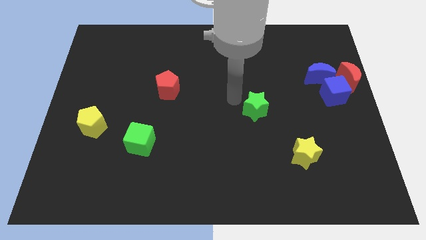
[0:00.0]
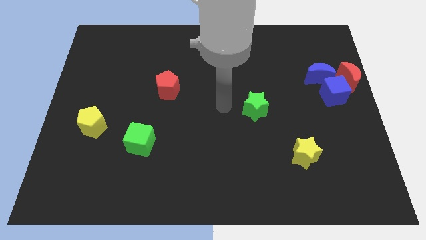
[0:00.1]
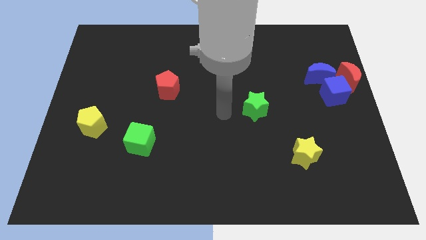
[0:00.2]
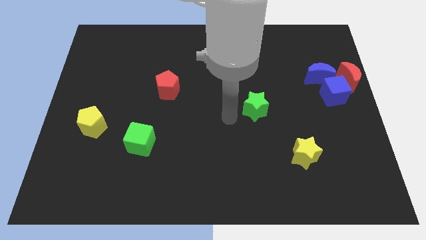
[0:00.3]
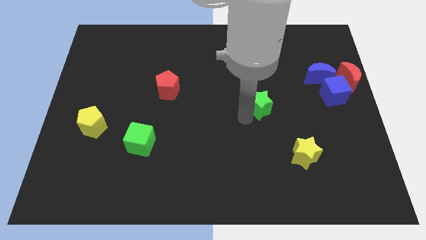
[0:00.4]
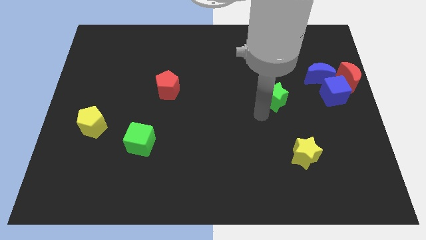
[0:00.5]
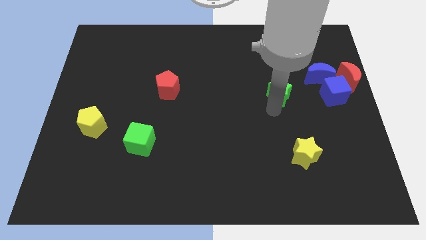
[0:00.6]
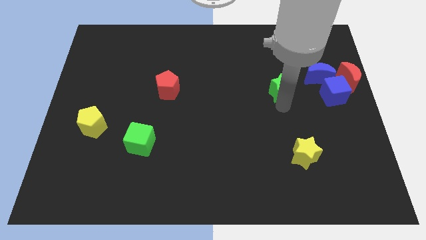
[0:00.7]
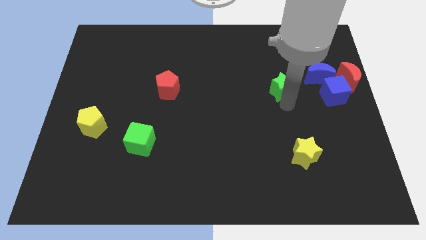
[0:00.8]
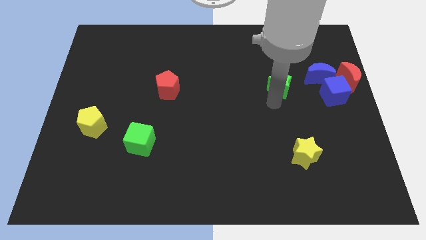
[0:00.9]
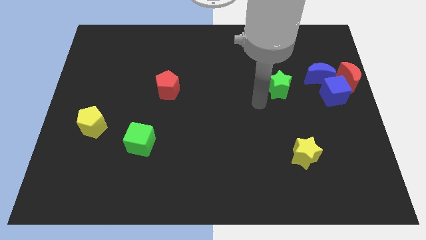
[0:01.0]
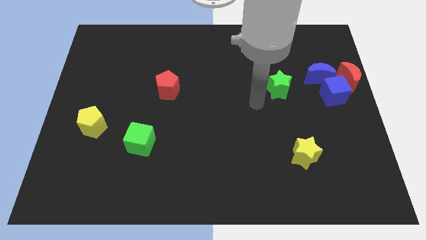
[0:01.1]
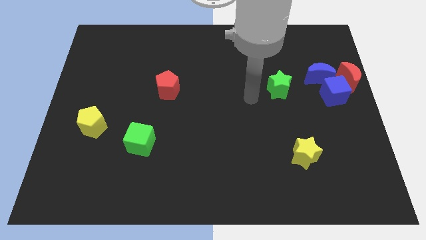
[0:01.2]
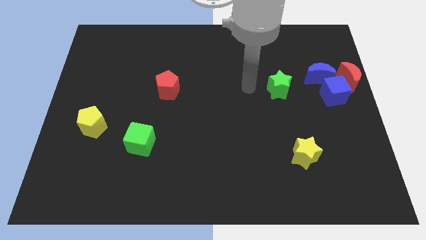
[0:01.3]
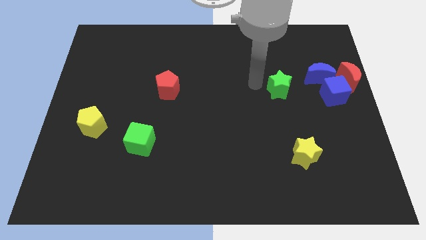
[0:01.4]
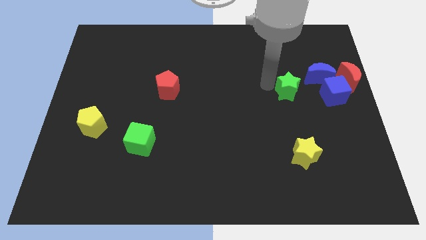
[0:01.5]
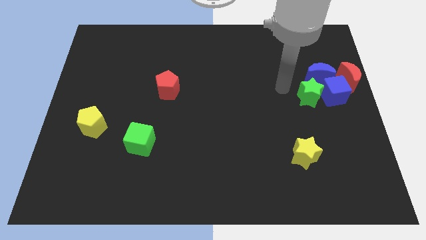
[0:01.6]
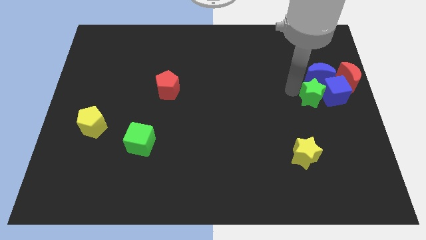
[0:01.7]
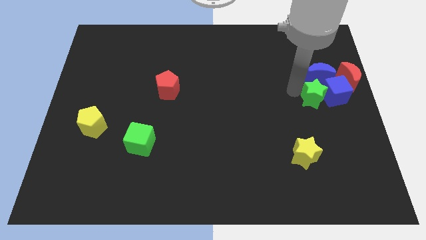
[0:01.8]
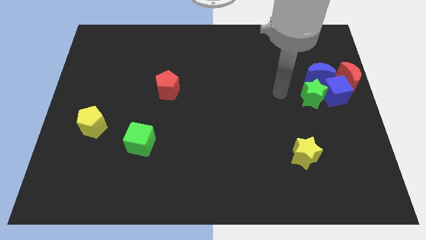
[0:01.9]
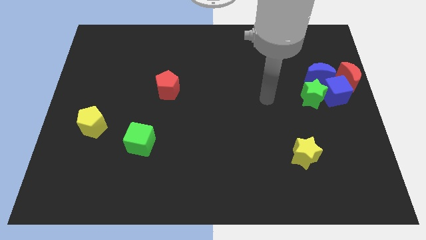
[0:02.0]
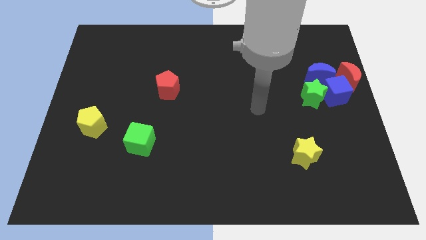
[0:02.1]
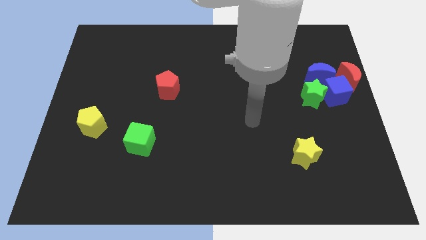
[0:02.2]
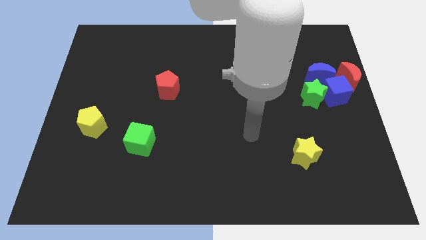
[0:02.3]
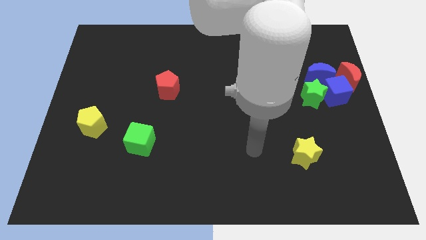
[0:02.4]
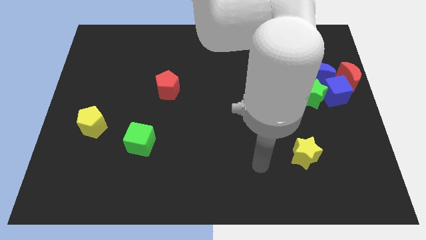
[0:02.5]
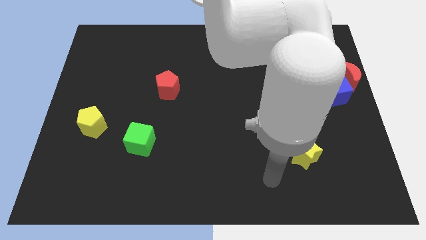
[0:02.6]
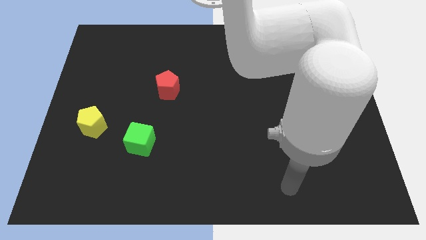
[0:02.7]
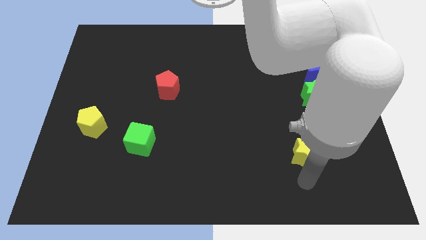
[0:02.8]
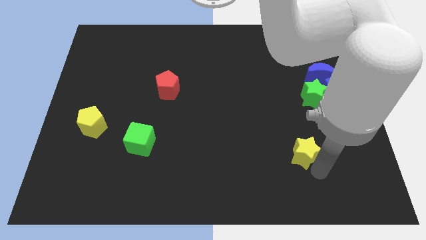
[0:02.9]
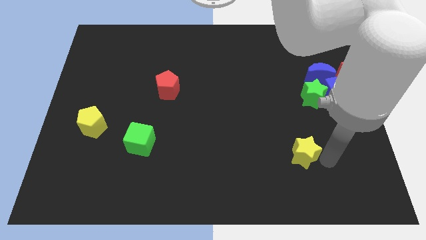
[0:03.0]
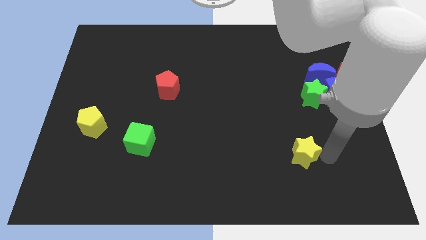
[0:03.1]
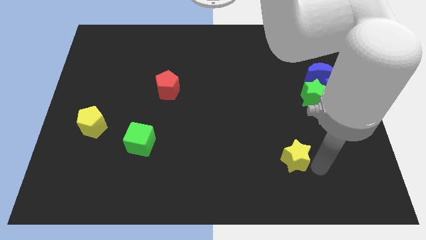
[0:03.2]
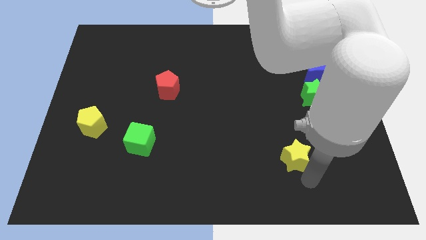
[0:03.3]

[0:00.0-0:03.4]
push the green star into a group of blocks

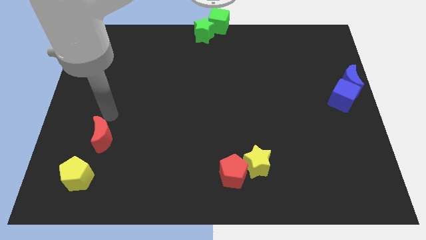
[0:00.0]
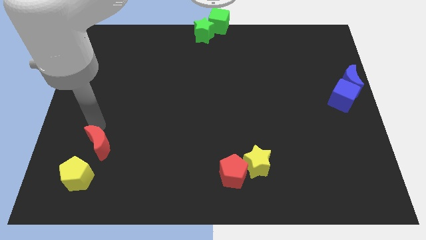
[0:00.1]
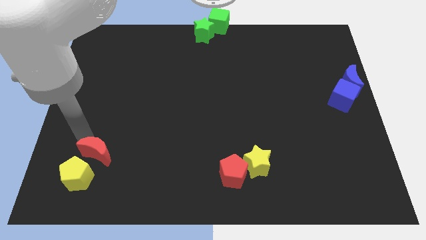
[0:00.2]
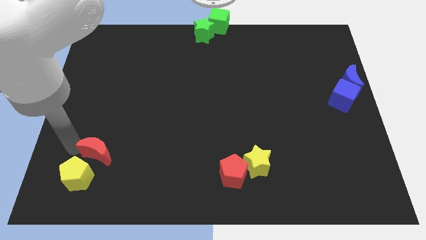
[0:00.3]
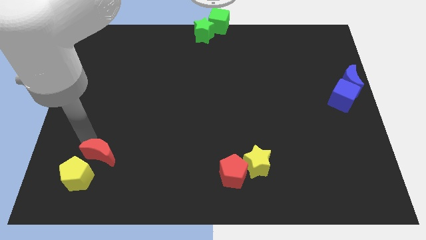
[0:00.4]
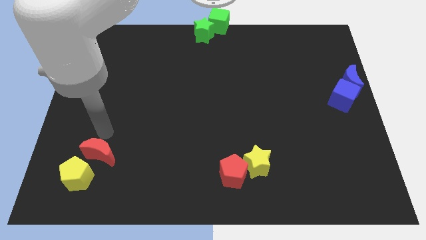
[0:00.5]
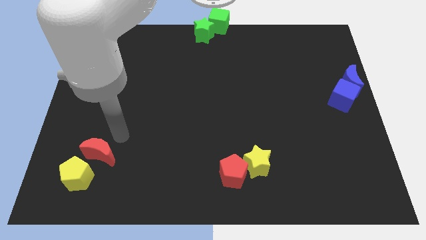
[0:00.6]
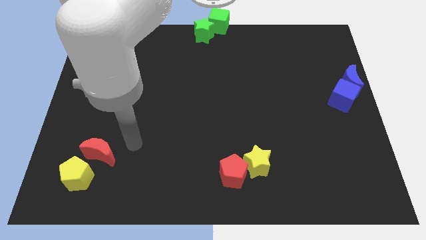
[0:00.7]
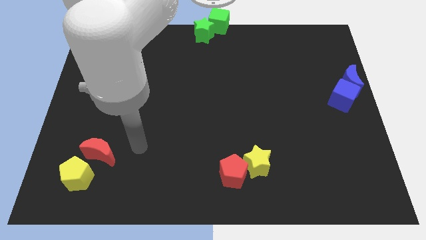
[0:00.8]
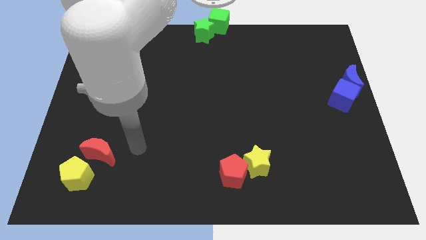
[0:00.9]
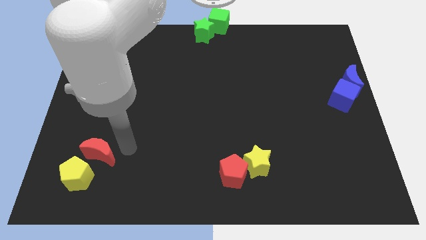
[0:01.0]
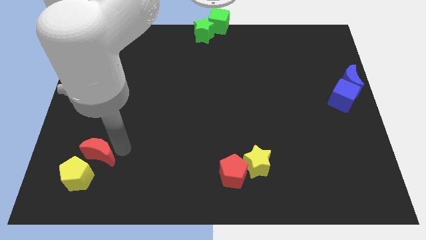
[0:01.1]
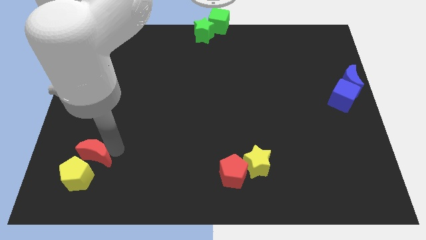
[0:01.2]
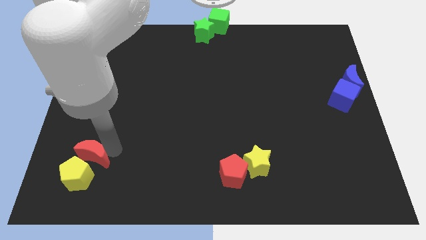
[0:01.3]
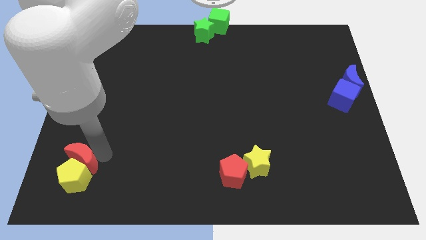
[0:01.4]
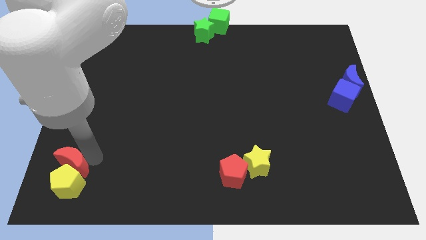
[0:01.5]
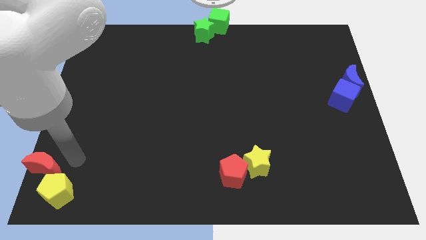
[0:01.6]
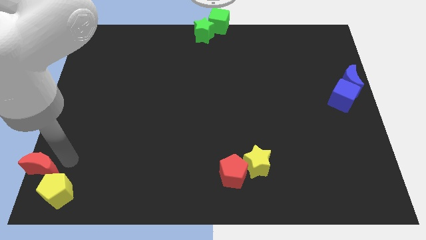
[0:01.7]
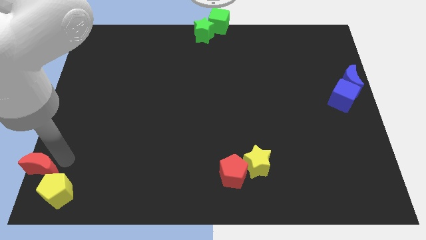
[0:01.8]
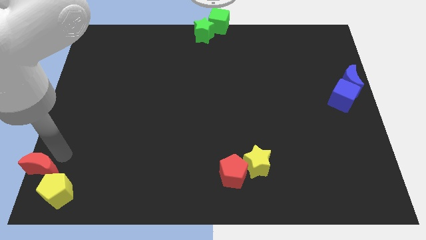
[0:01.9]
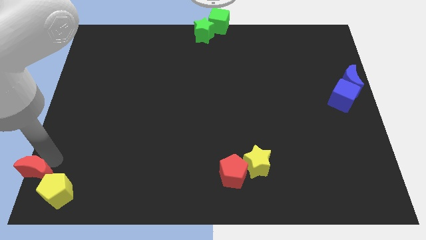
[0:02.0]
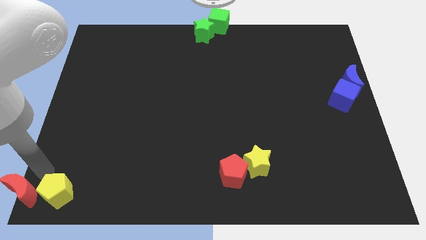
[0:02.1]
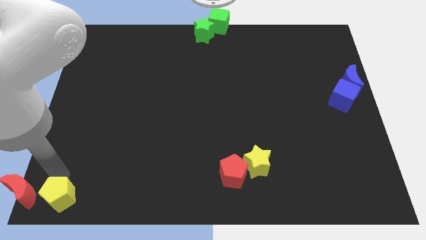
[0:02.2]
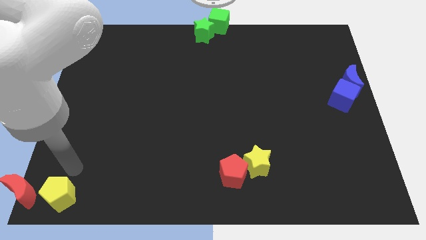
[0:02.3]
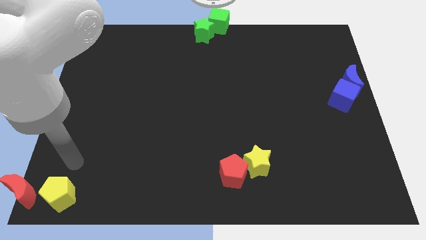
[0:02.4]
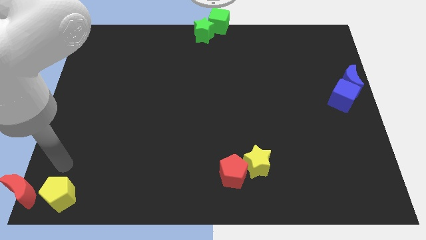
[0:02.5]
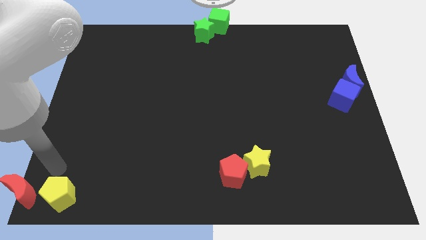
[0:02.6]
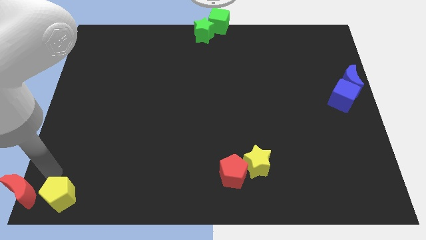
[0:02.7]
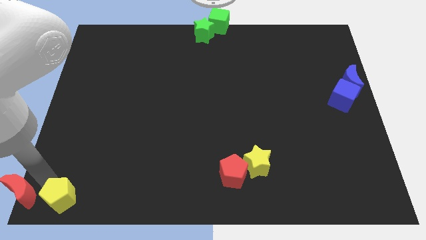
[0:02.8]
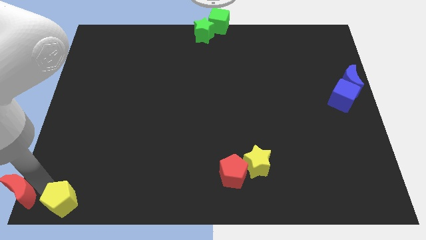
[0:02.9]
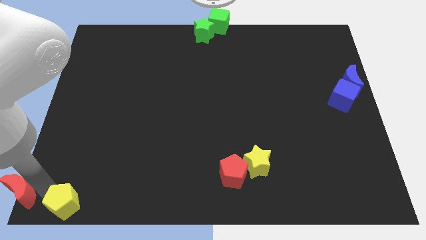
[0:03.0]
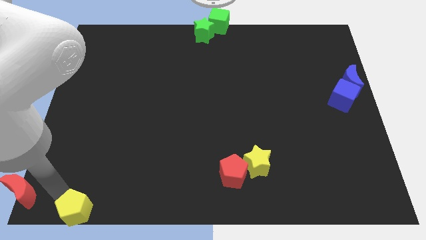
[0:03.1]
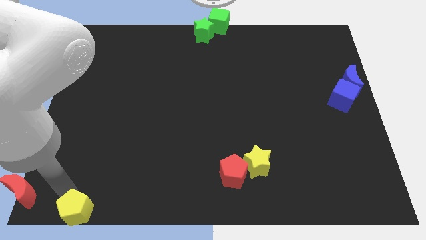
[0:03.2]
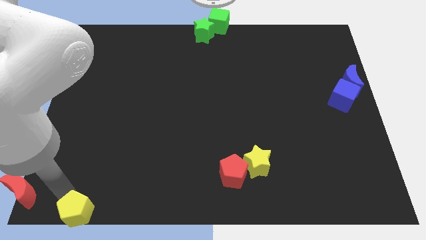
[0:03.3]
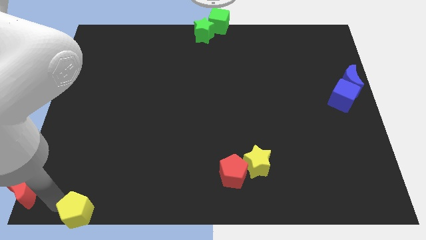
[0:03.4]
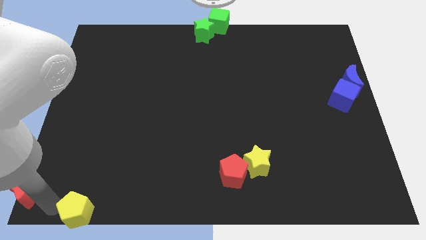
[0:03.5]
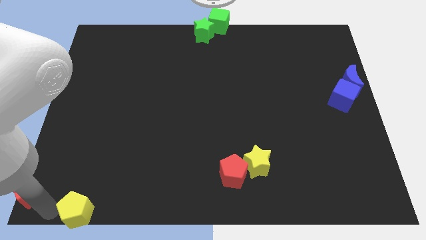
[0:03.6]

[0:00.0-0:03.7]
place your arm in between the red moon and yellow pentagon

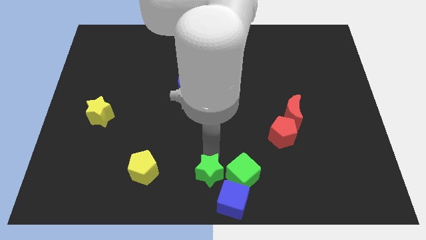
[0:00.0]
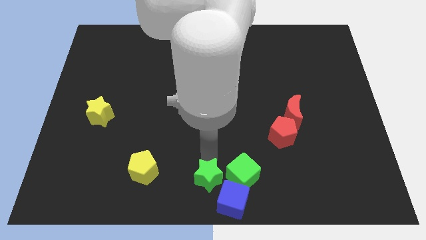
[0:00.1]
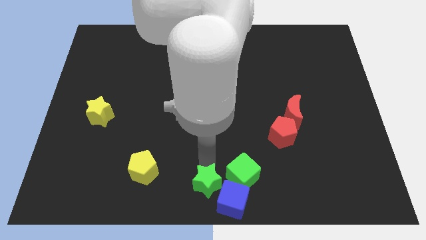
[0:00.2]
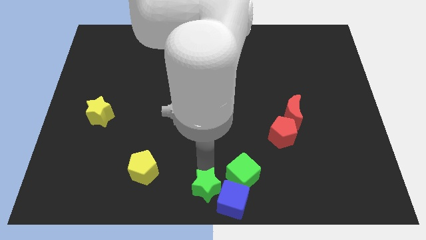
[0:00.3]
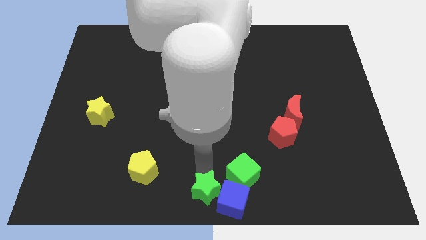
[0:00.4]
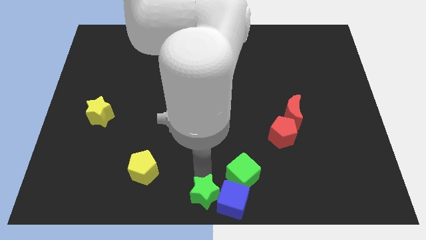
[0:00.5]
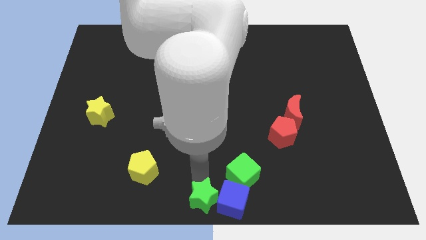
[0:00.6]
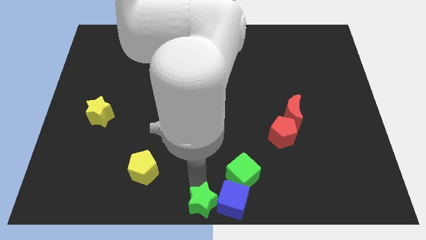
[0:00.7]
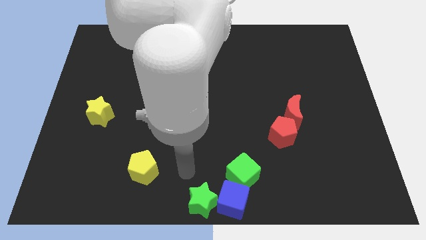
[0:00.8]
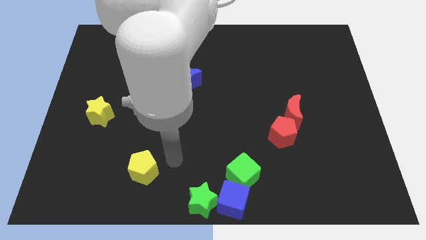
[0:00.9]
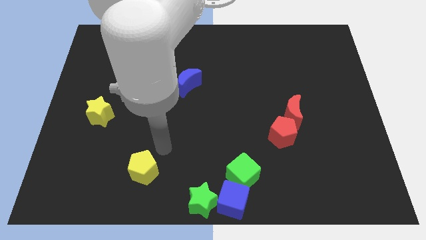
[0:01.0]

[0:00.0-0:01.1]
slide the green star to the bottom left side of the blue cube

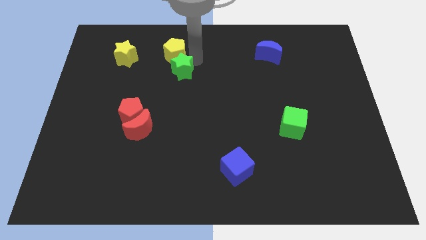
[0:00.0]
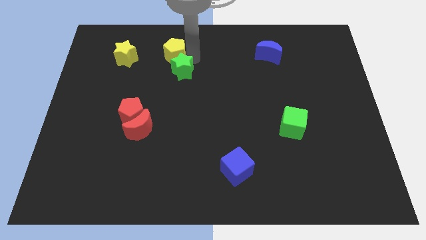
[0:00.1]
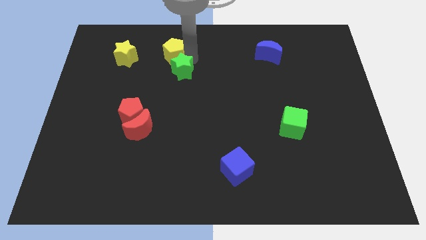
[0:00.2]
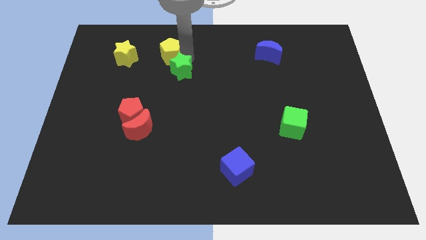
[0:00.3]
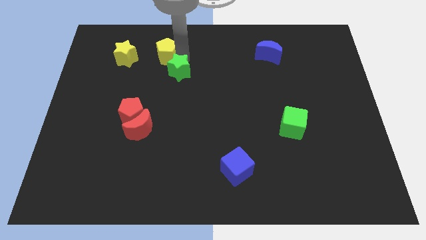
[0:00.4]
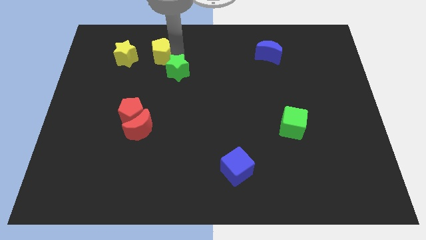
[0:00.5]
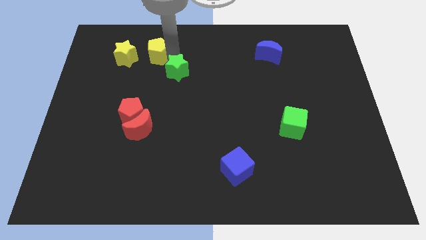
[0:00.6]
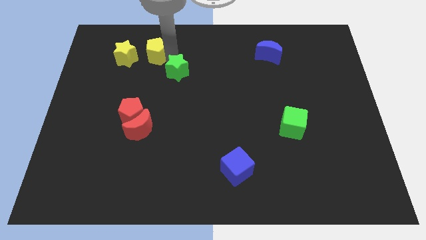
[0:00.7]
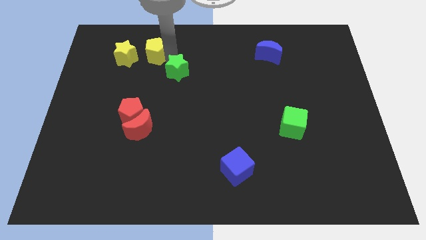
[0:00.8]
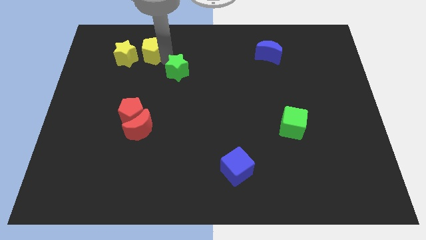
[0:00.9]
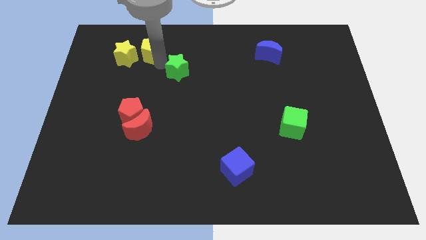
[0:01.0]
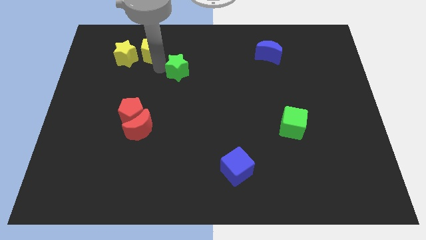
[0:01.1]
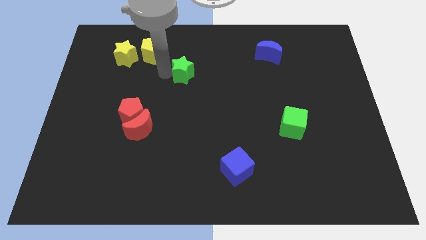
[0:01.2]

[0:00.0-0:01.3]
move the yellow pentagon near the yellow star
